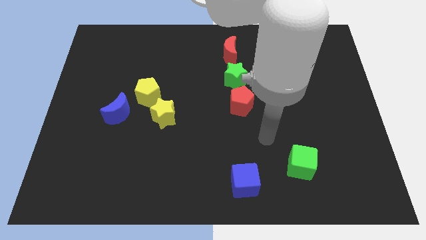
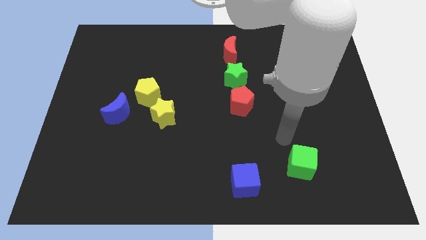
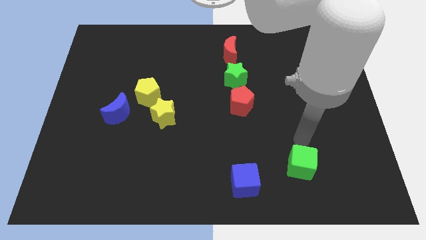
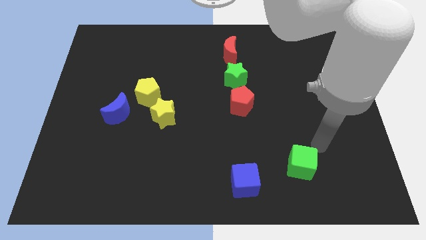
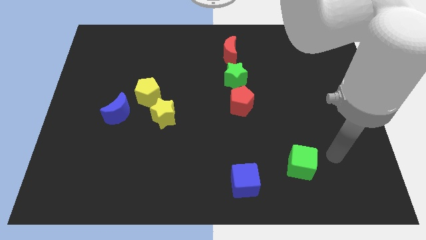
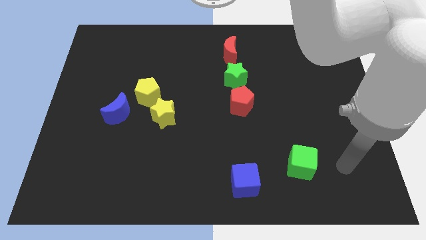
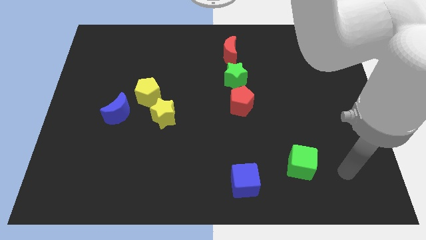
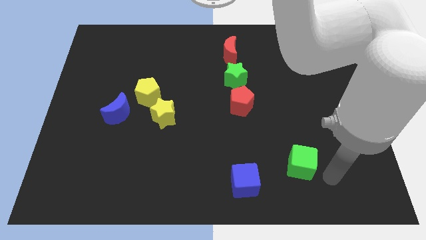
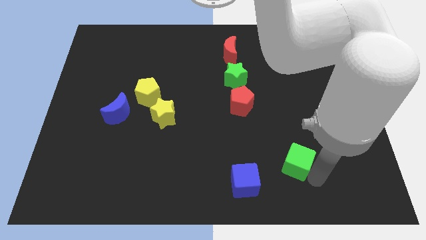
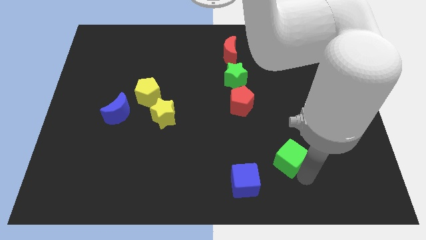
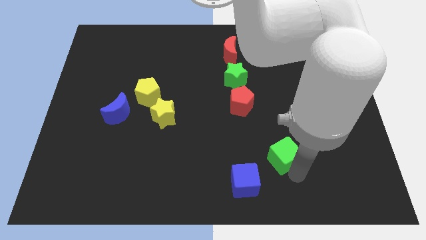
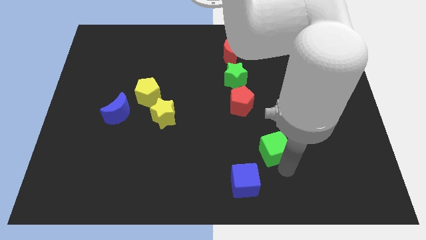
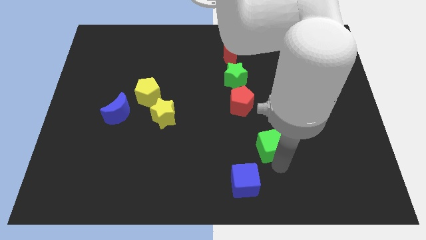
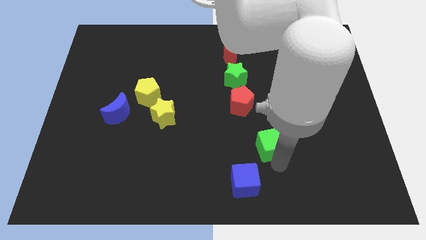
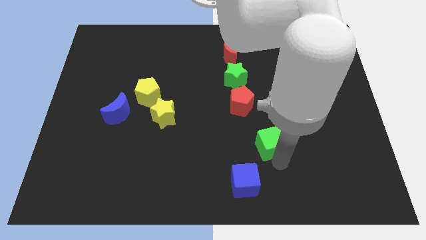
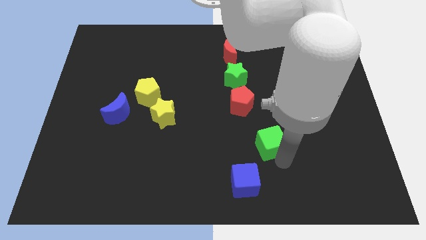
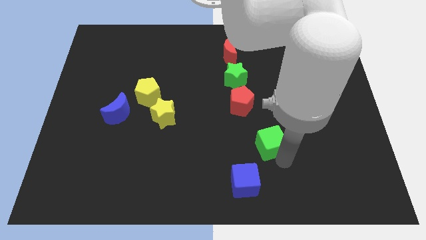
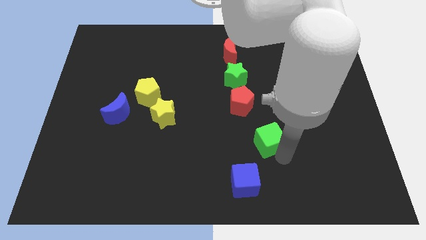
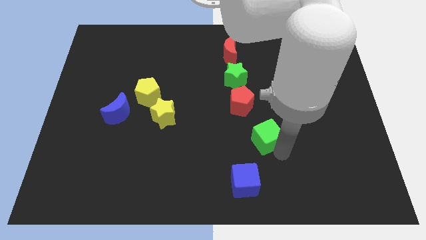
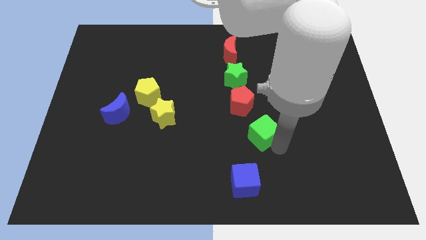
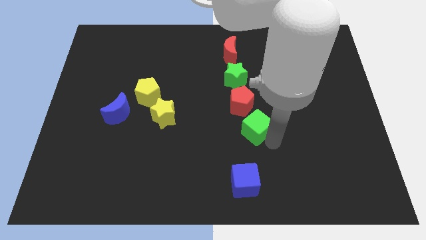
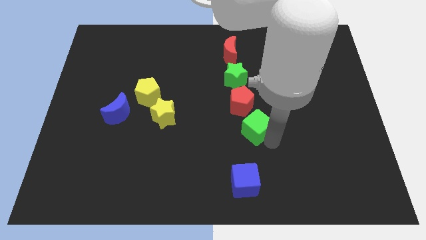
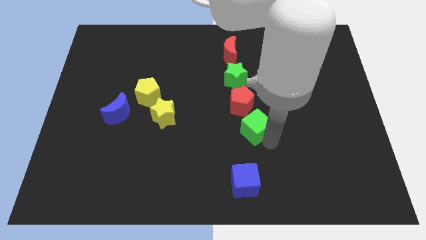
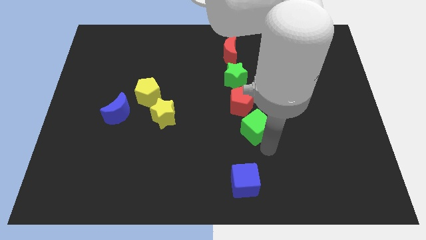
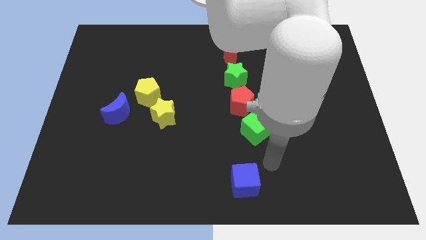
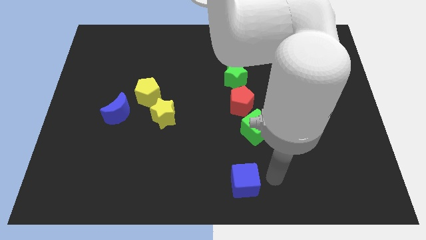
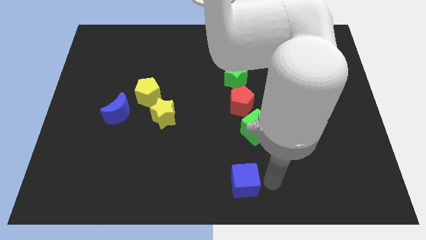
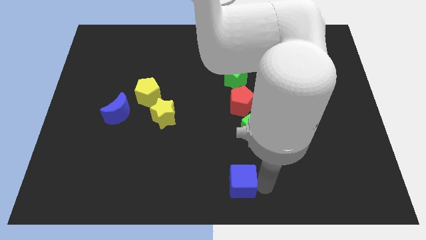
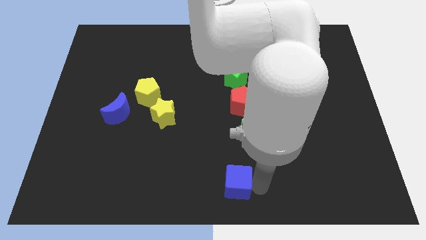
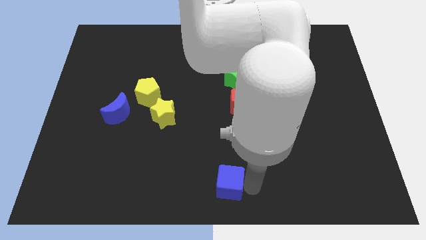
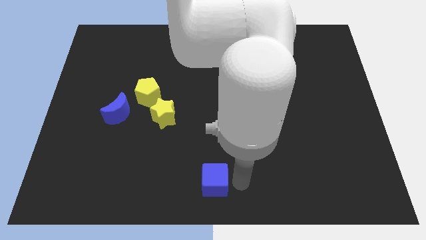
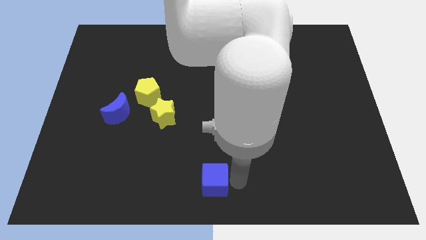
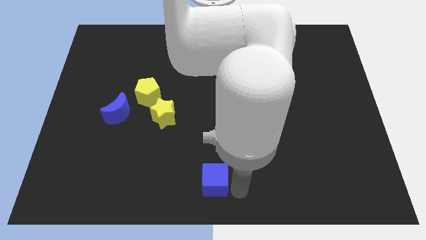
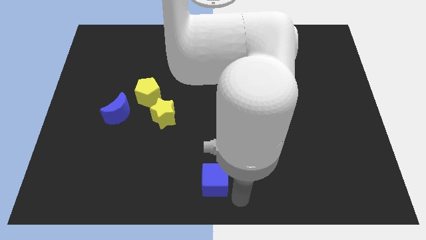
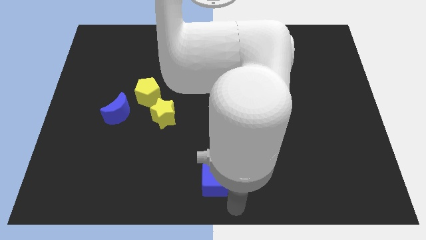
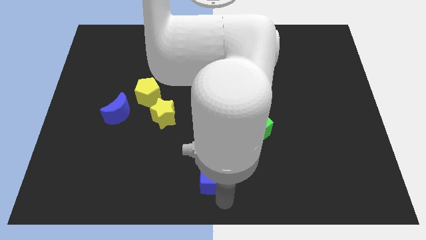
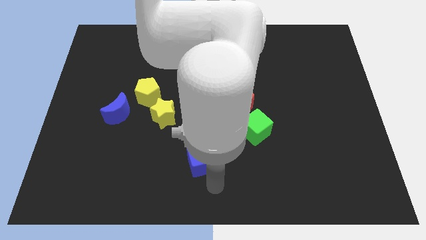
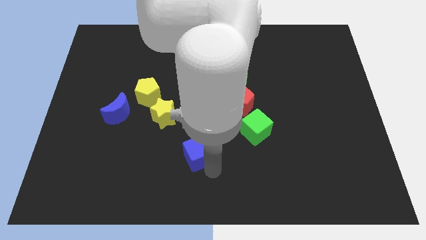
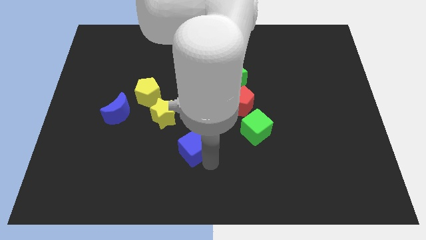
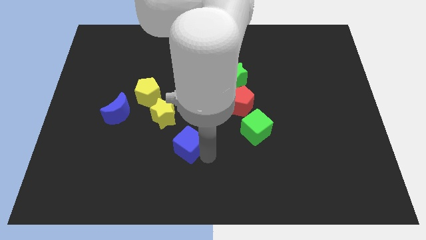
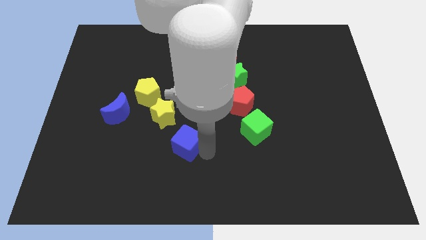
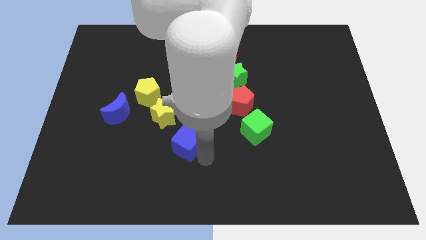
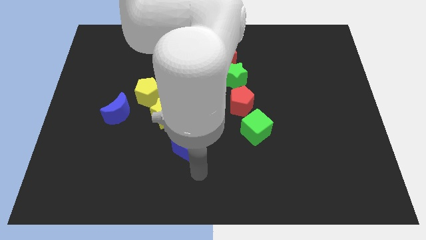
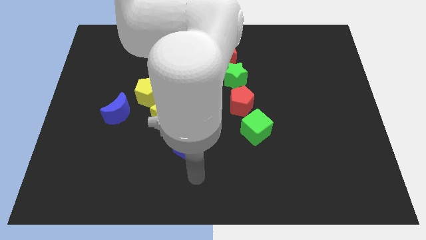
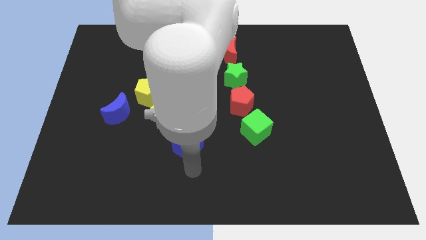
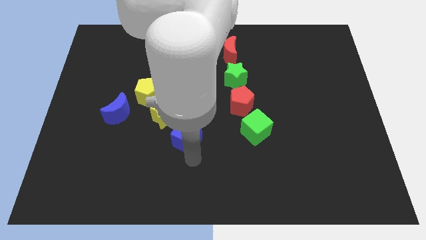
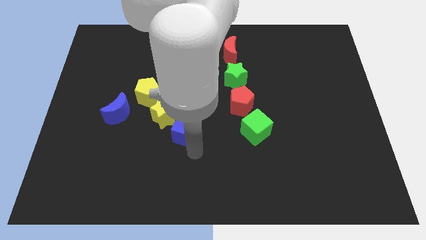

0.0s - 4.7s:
make the two cubes horizontal to each other

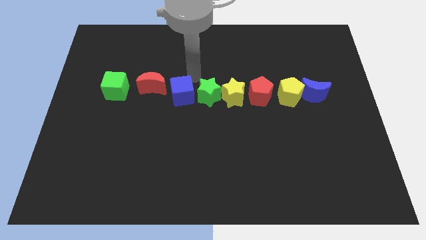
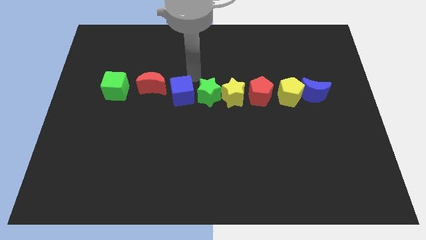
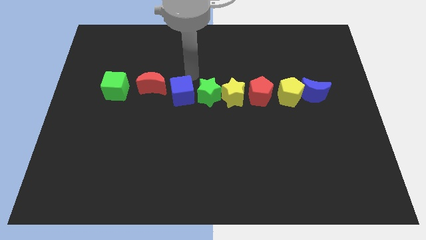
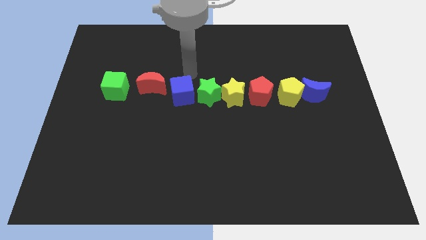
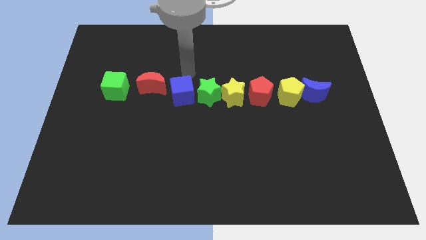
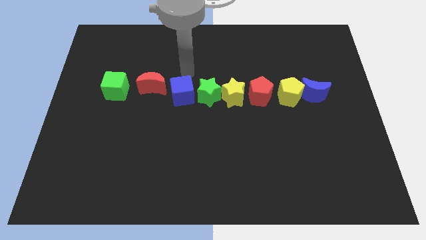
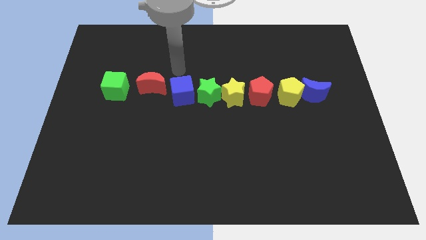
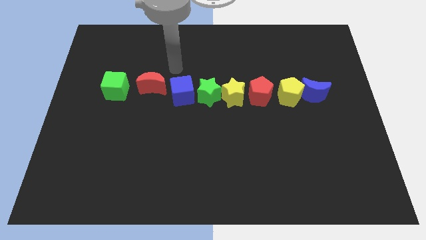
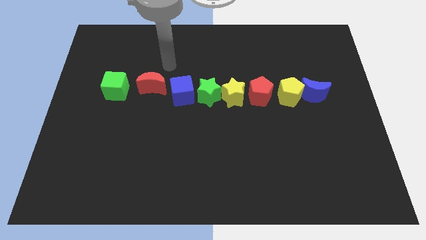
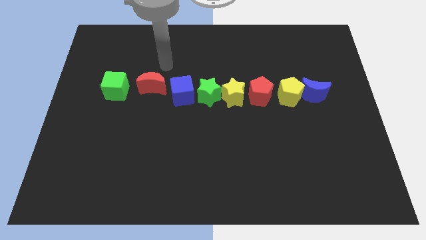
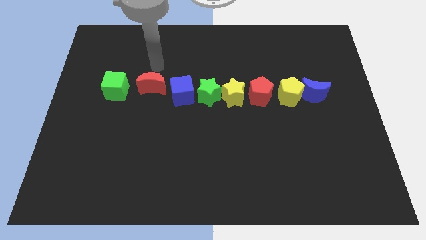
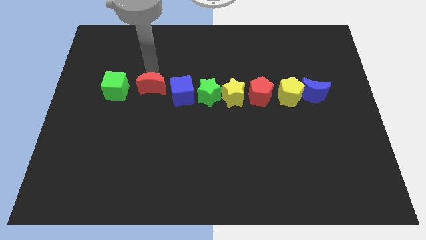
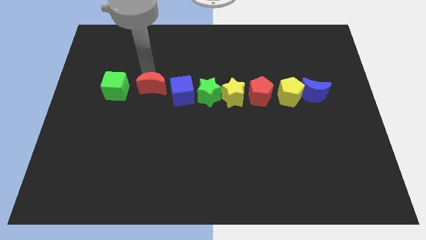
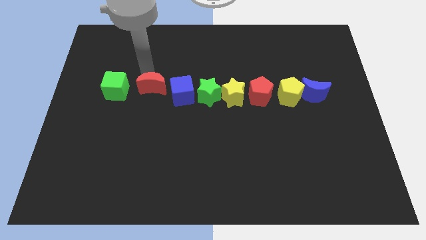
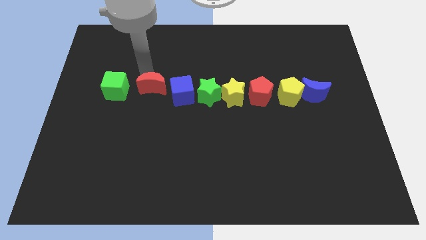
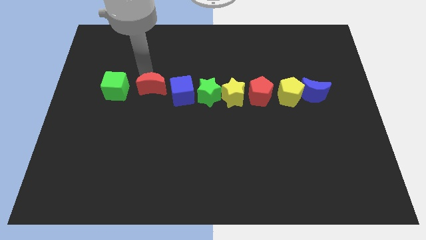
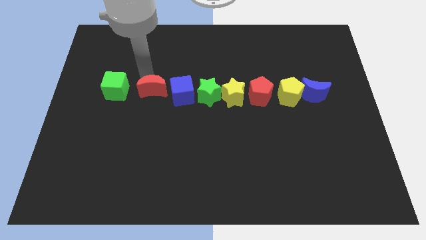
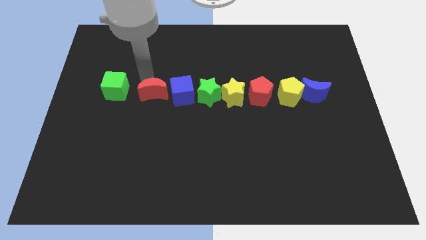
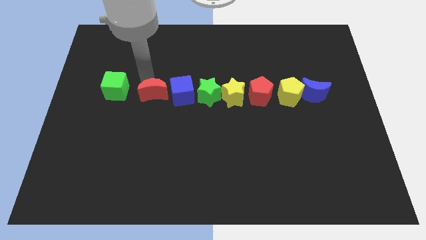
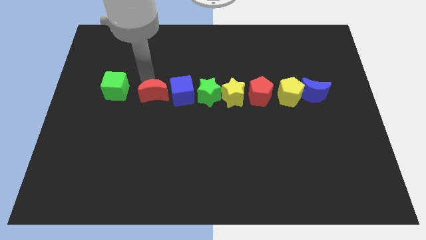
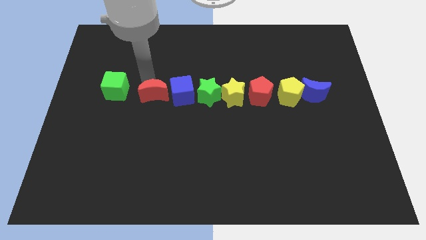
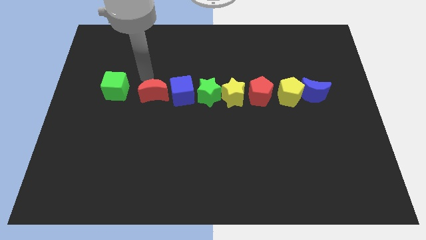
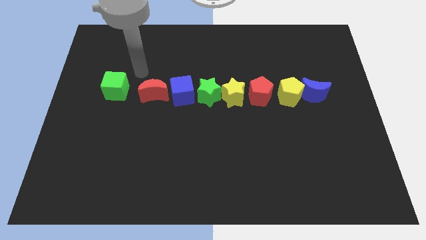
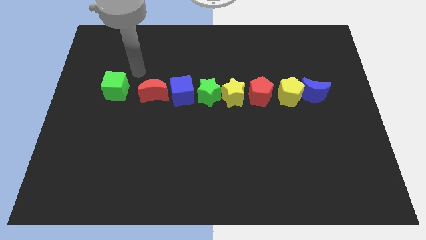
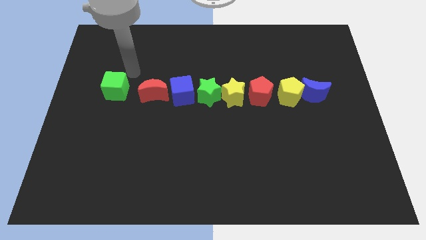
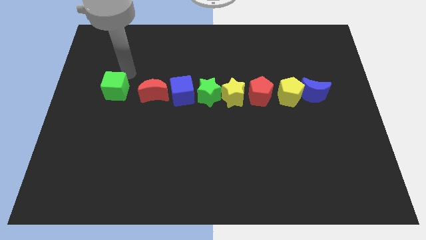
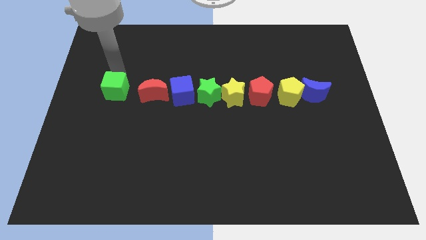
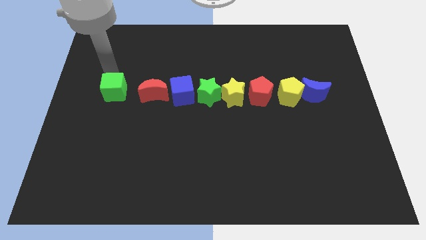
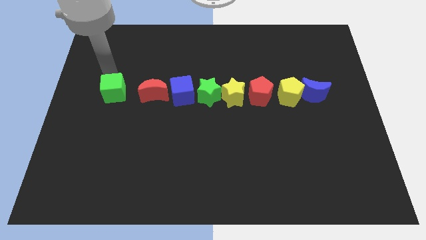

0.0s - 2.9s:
push the red crescent slightly to the down

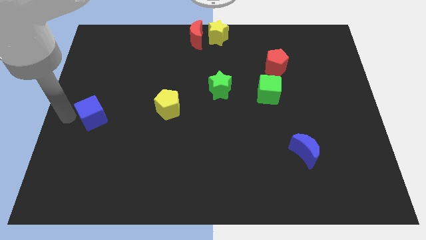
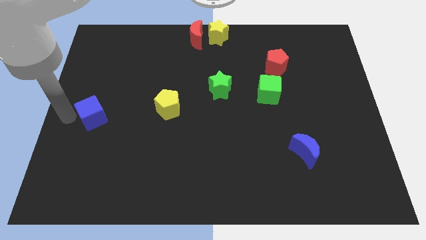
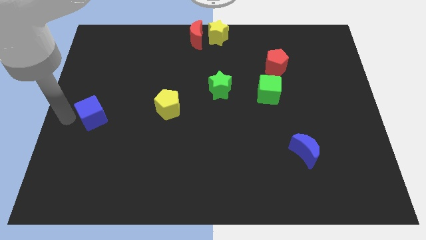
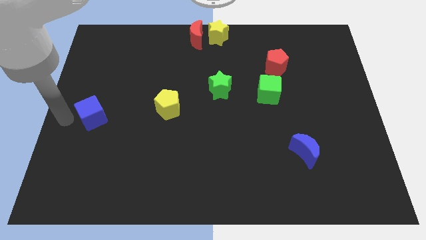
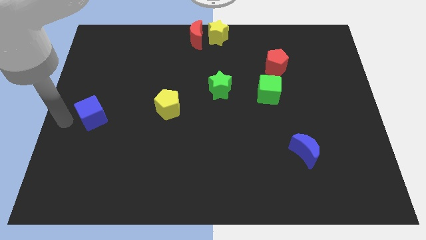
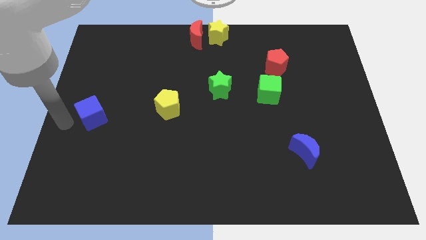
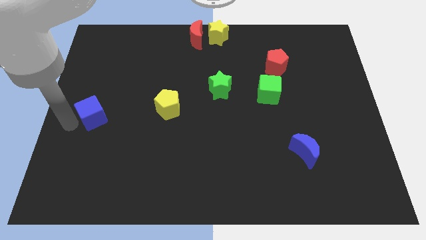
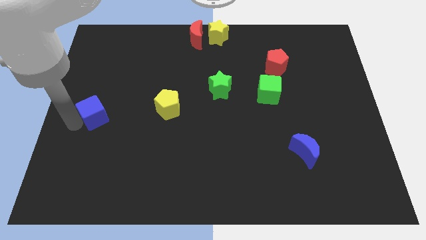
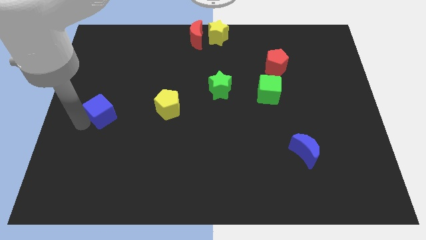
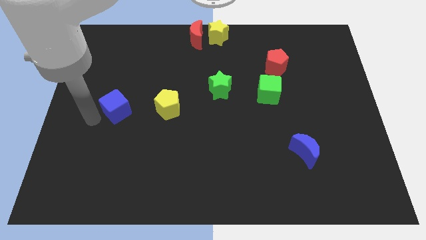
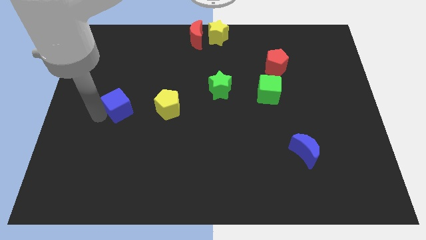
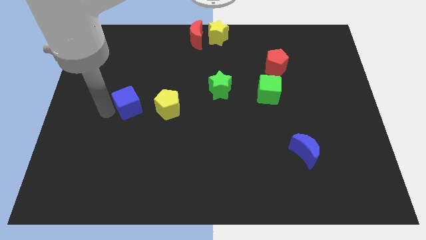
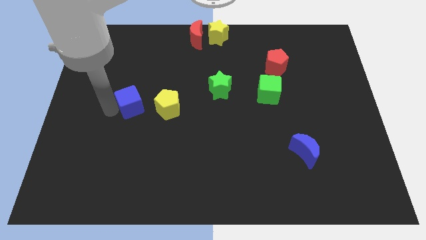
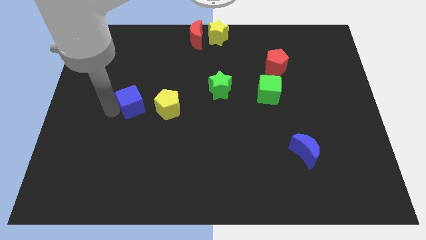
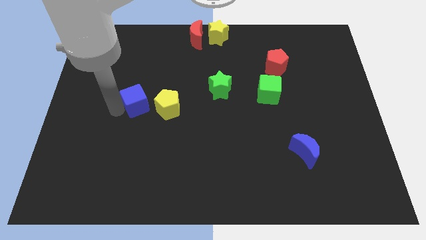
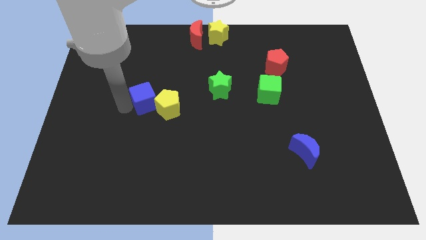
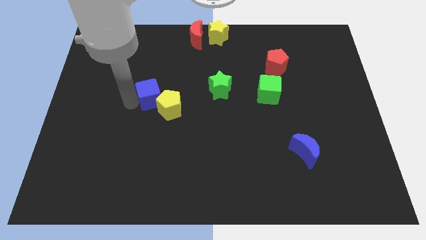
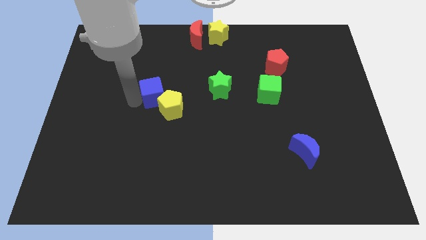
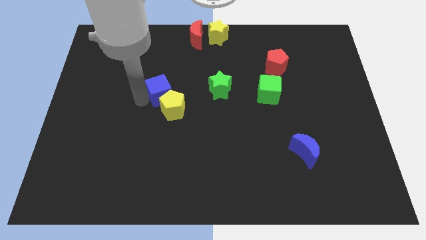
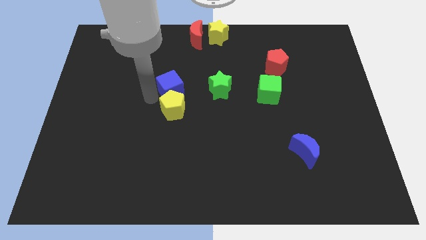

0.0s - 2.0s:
make the blue cube to touch the top side of the yellow pentagon
